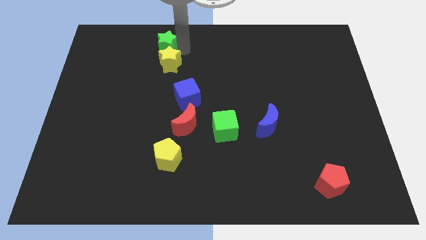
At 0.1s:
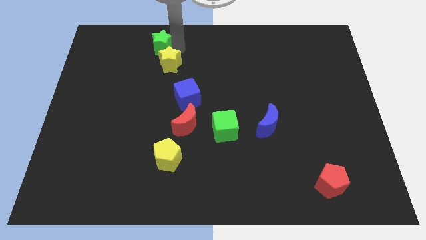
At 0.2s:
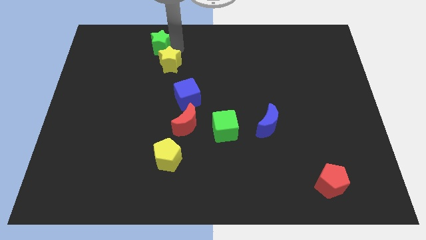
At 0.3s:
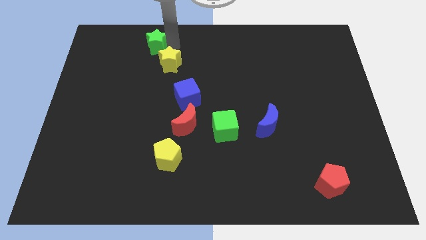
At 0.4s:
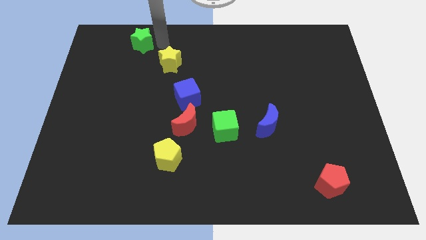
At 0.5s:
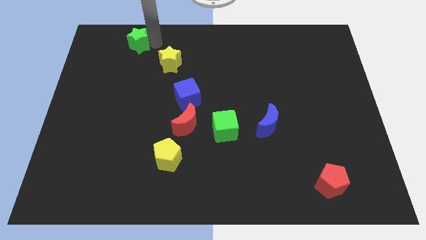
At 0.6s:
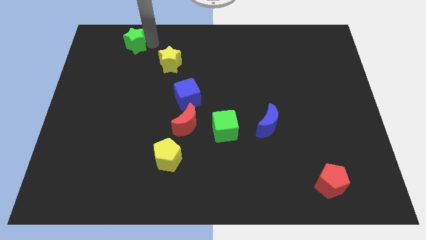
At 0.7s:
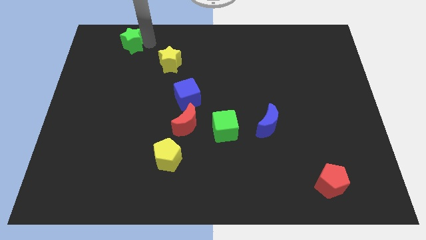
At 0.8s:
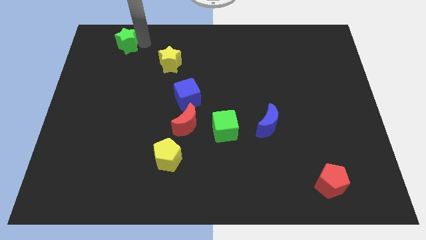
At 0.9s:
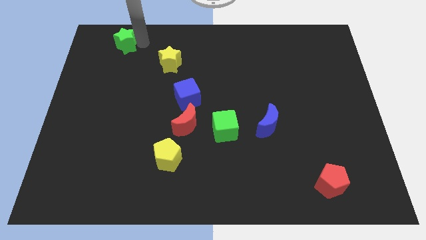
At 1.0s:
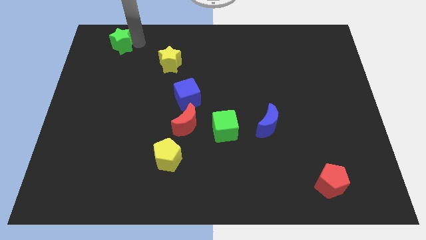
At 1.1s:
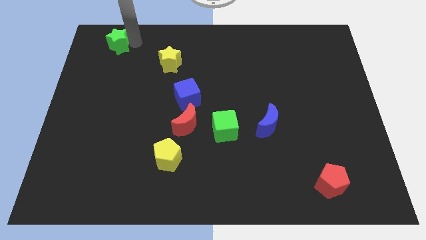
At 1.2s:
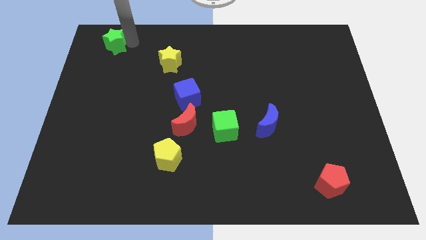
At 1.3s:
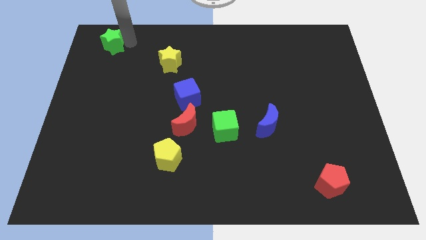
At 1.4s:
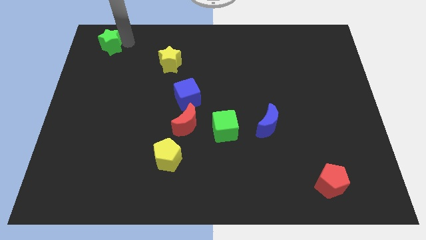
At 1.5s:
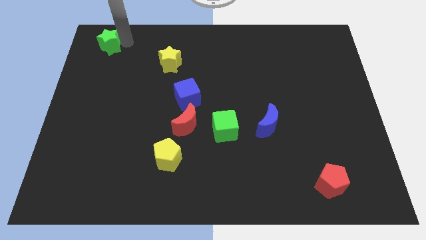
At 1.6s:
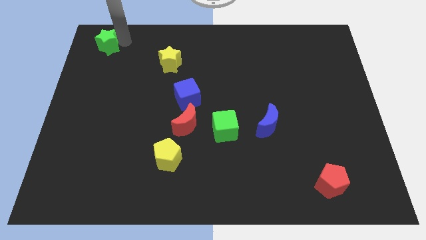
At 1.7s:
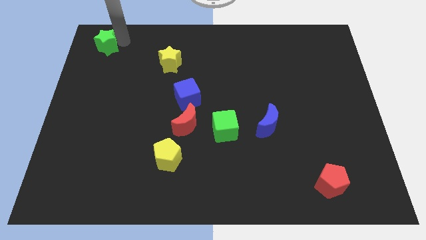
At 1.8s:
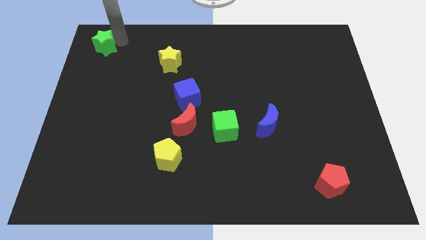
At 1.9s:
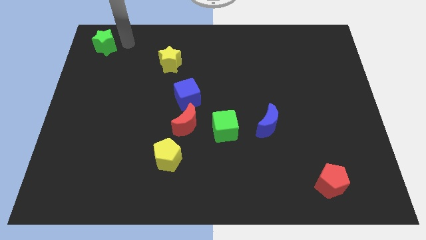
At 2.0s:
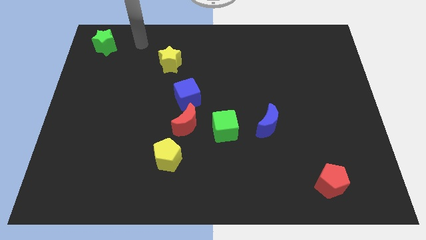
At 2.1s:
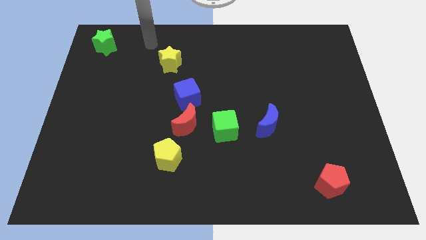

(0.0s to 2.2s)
separate the green star from the yellow star

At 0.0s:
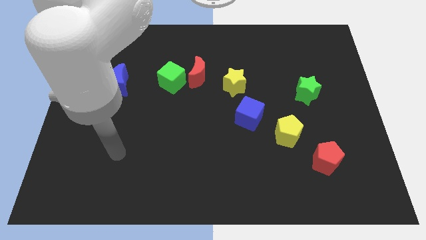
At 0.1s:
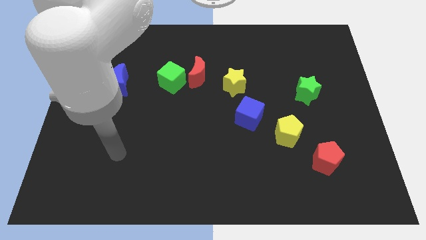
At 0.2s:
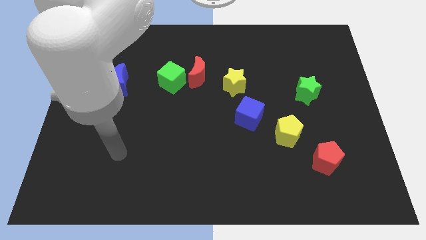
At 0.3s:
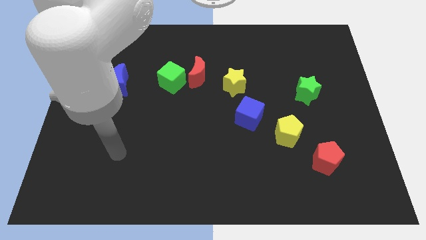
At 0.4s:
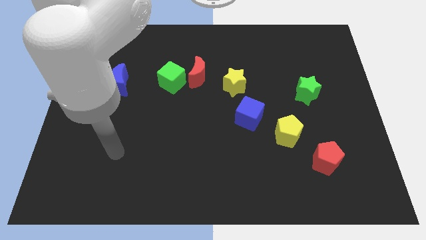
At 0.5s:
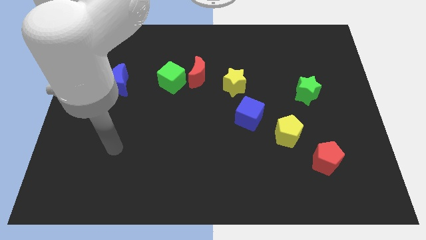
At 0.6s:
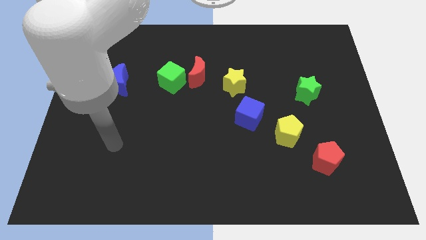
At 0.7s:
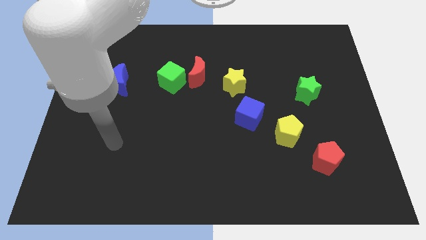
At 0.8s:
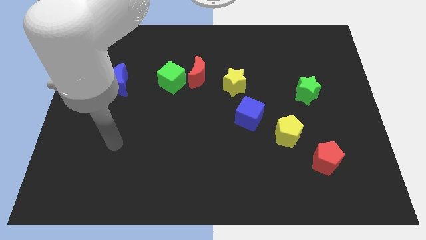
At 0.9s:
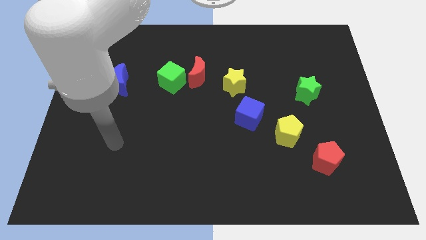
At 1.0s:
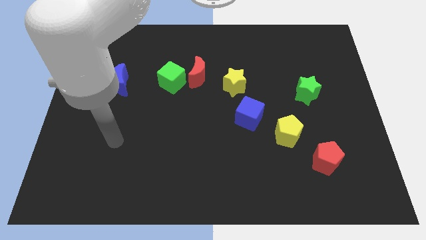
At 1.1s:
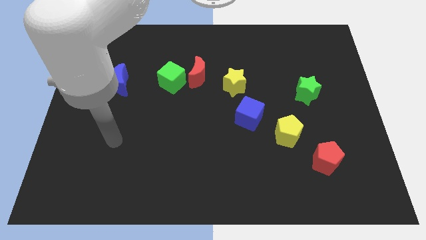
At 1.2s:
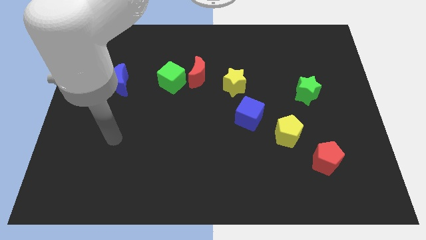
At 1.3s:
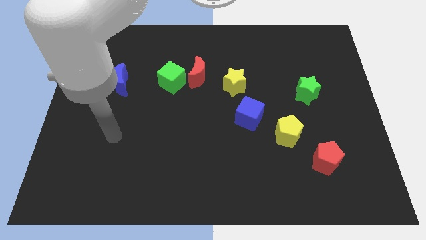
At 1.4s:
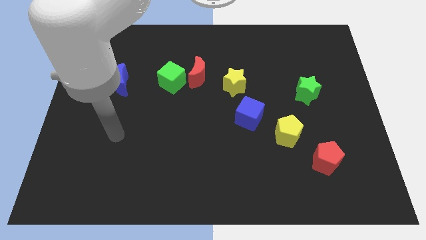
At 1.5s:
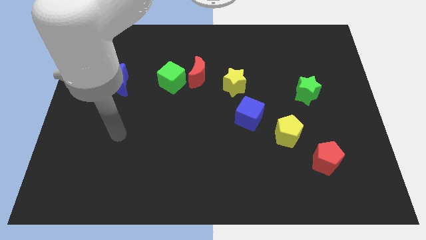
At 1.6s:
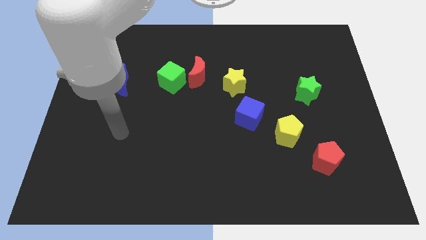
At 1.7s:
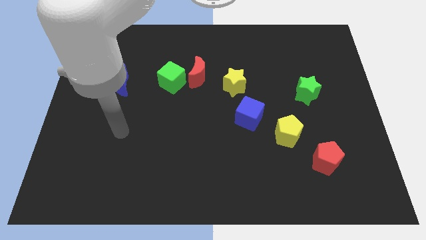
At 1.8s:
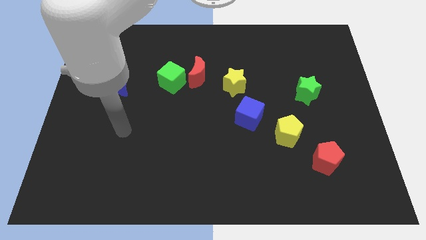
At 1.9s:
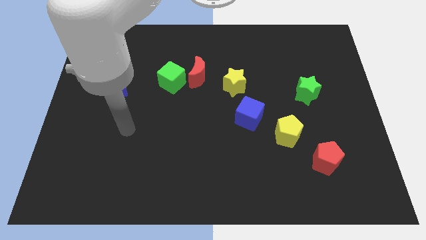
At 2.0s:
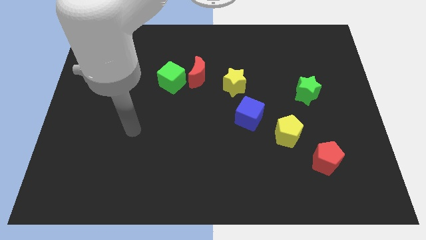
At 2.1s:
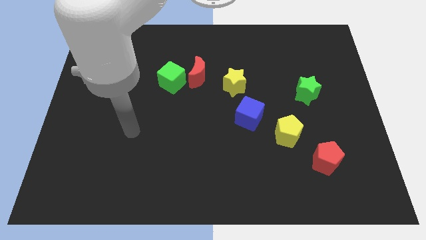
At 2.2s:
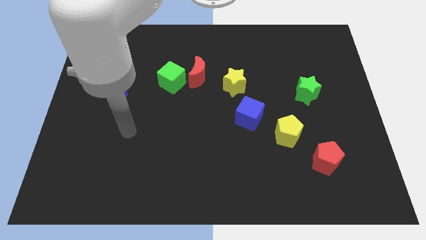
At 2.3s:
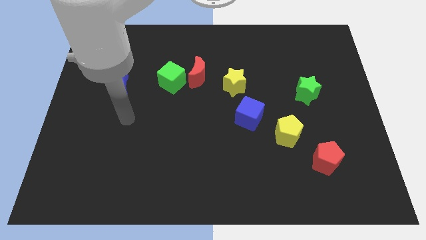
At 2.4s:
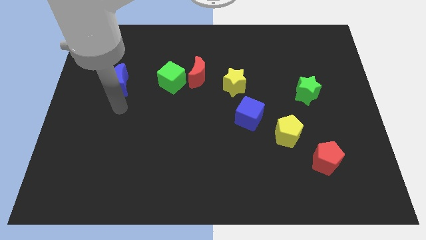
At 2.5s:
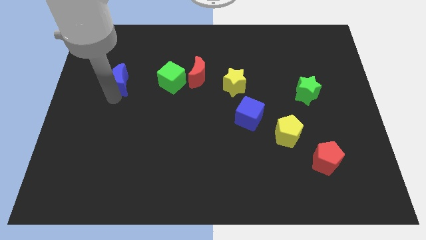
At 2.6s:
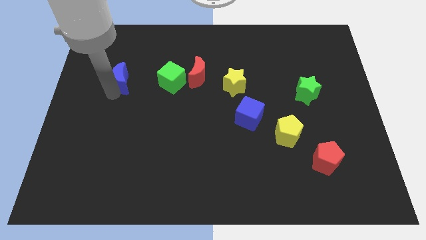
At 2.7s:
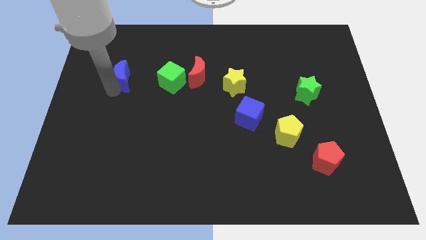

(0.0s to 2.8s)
place the arm close to the blue moon

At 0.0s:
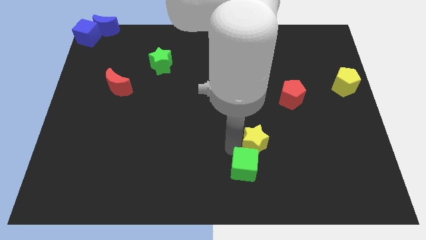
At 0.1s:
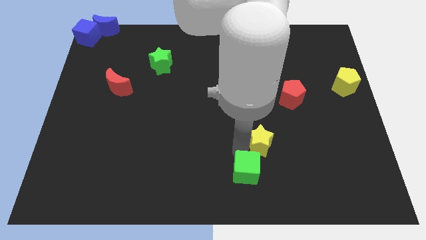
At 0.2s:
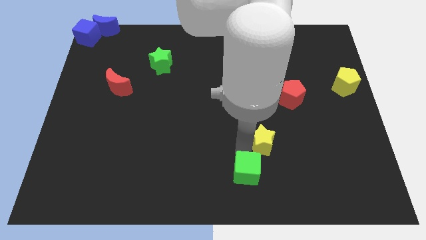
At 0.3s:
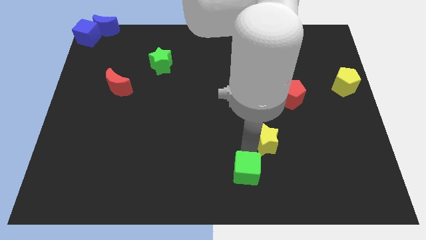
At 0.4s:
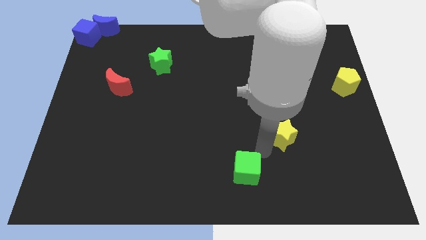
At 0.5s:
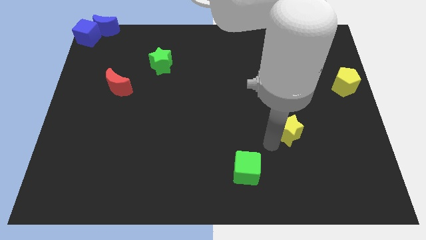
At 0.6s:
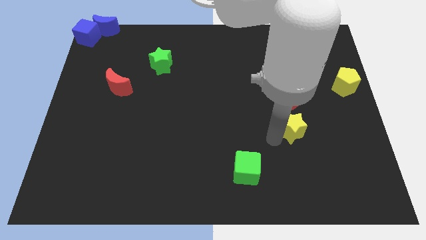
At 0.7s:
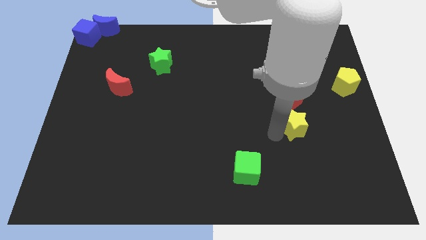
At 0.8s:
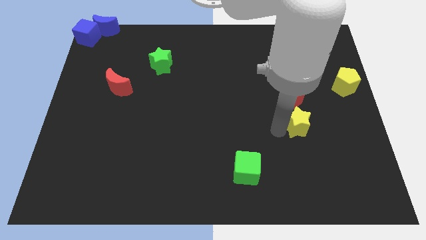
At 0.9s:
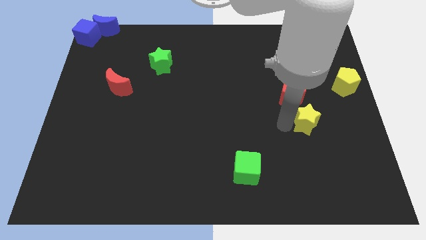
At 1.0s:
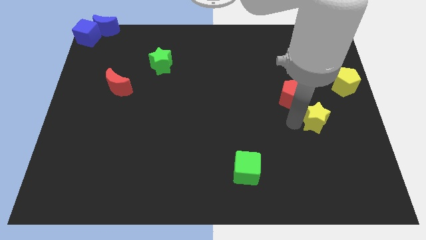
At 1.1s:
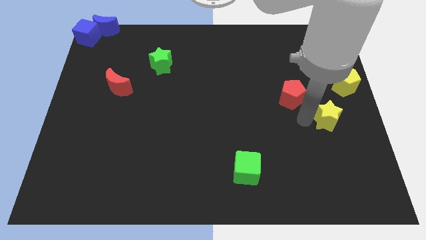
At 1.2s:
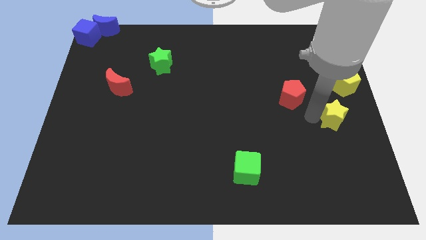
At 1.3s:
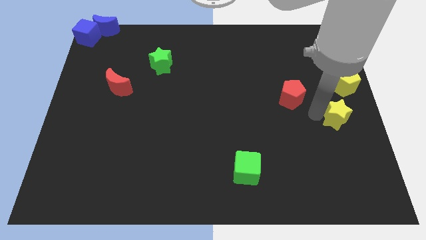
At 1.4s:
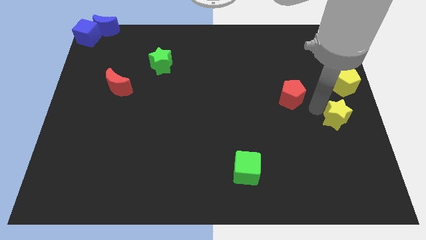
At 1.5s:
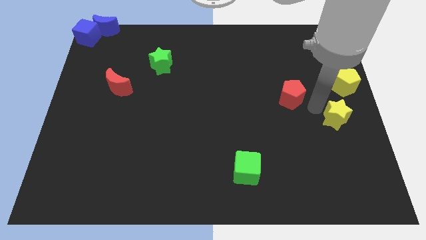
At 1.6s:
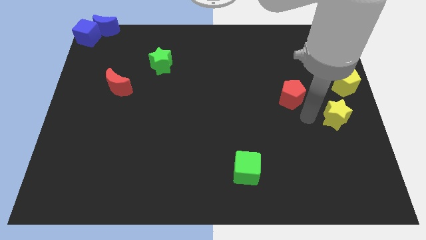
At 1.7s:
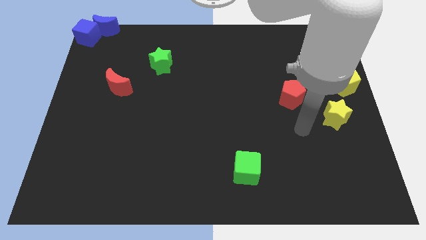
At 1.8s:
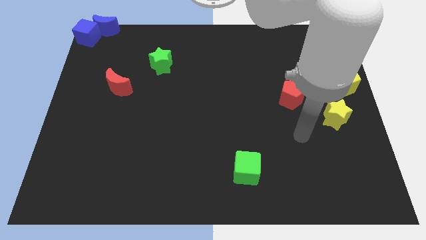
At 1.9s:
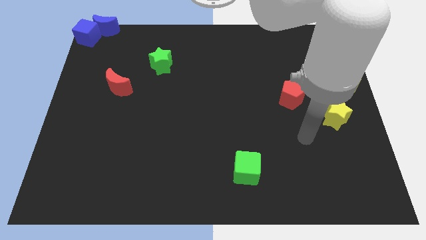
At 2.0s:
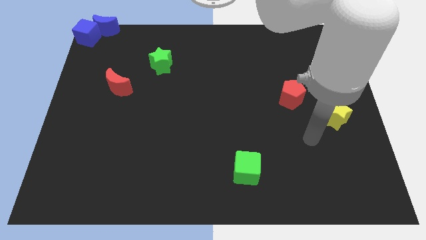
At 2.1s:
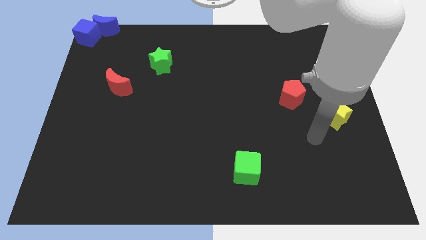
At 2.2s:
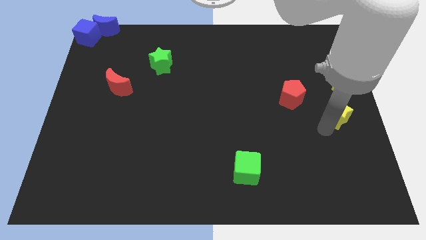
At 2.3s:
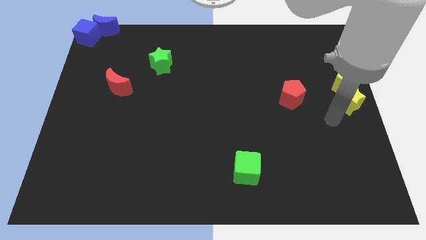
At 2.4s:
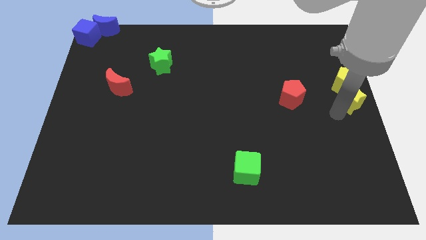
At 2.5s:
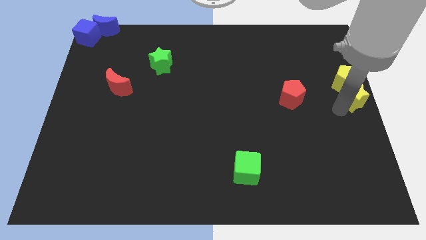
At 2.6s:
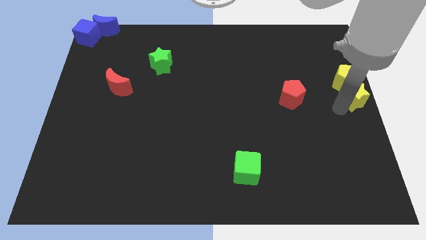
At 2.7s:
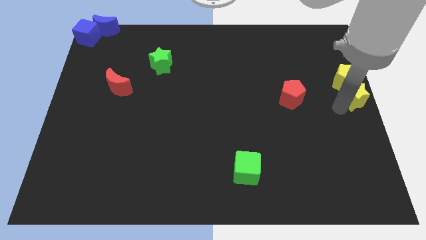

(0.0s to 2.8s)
move the yellow star into the yellow pentagon

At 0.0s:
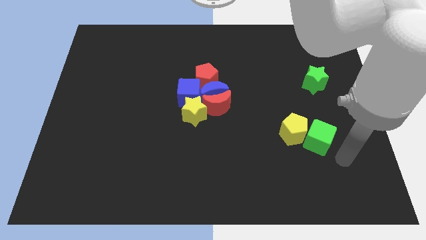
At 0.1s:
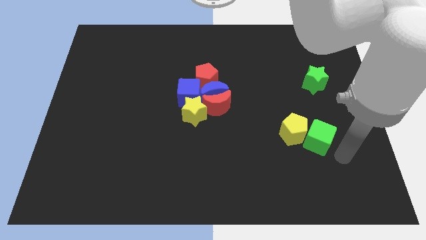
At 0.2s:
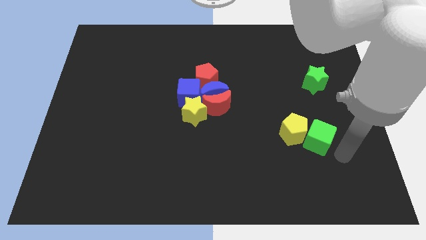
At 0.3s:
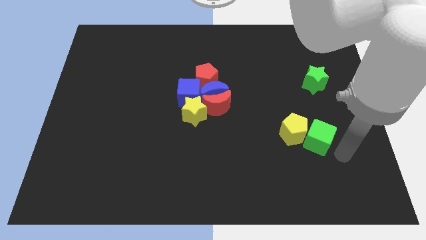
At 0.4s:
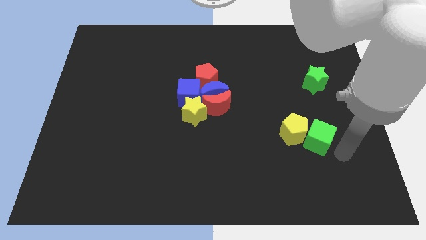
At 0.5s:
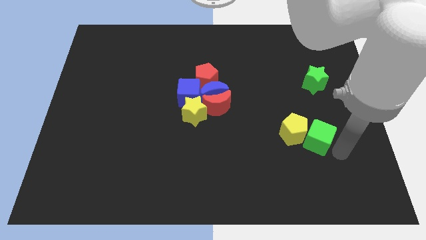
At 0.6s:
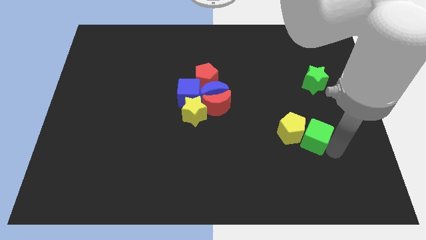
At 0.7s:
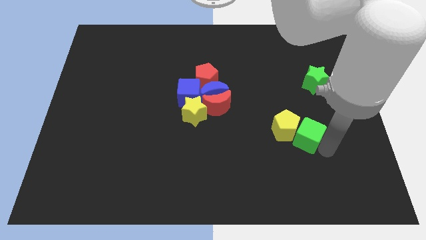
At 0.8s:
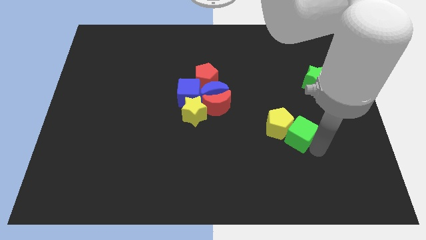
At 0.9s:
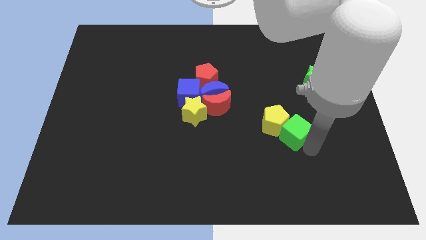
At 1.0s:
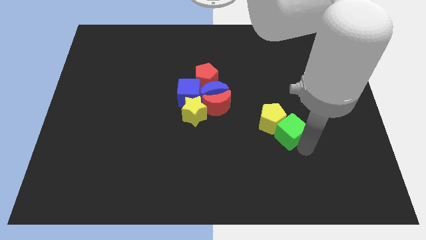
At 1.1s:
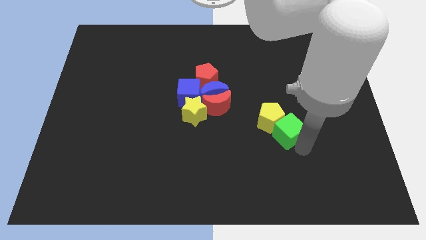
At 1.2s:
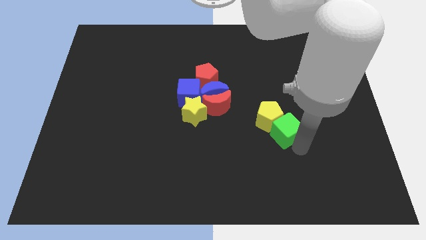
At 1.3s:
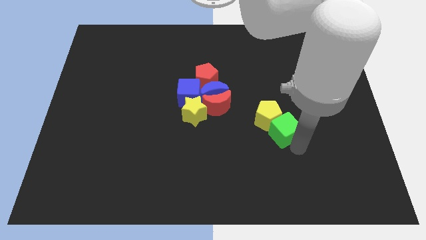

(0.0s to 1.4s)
move the green cube along with the yellow pentagon towards the group of blocks

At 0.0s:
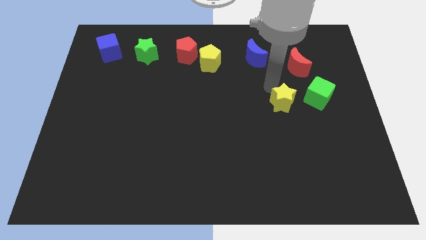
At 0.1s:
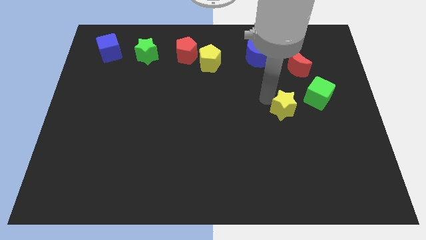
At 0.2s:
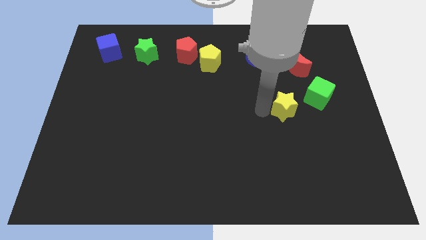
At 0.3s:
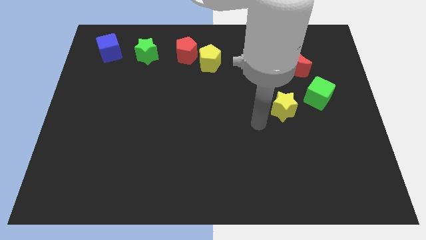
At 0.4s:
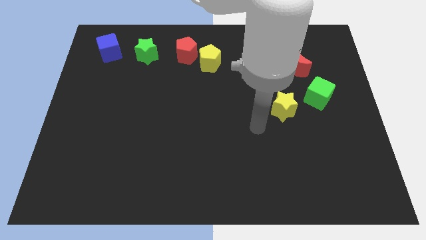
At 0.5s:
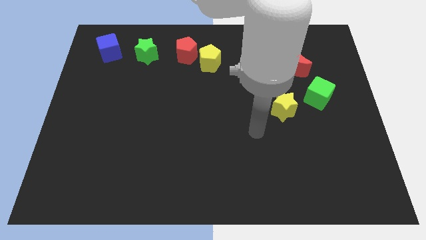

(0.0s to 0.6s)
touch left to the yellow star
